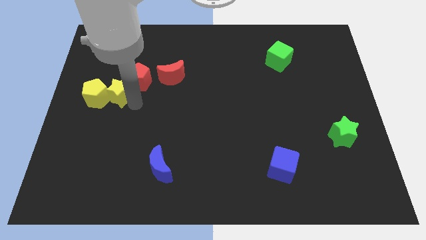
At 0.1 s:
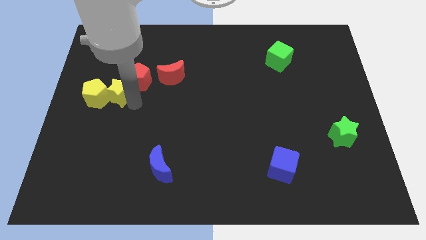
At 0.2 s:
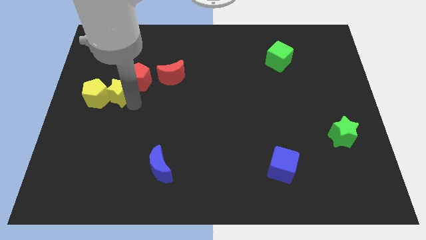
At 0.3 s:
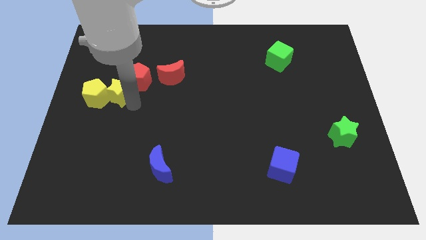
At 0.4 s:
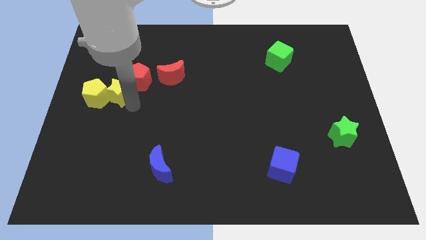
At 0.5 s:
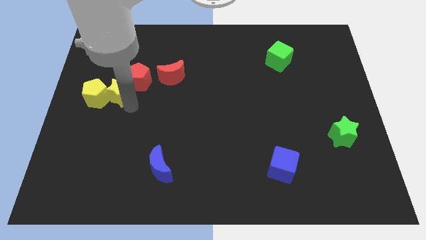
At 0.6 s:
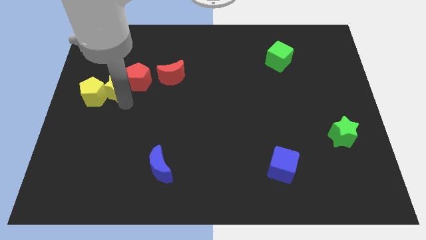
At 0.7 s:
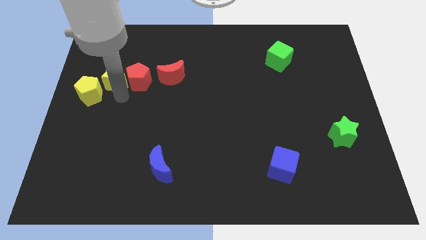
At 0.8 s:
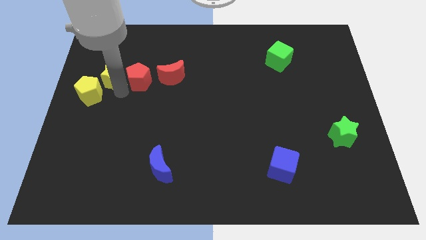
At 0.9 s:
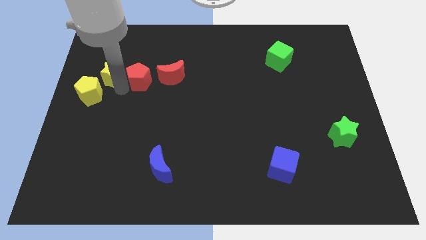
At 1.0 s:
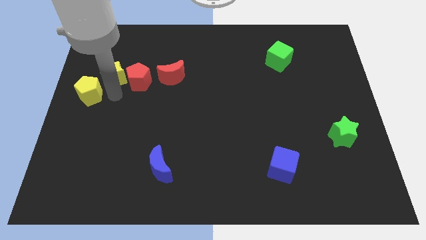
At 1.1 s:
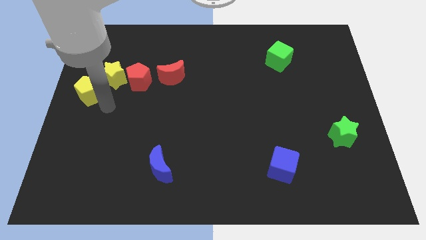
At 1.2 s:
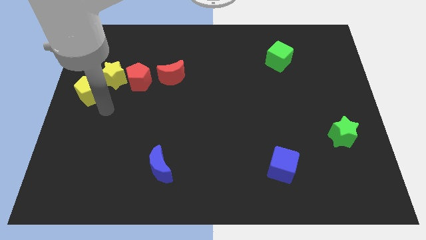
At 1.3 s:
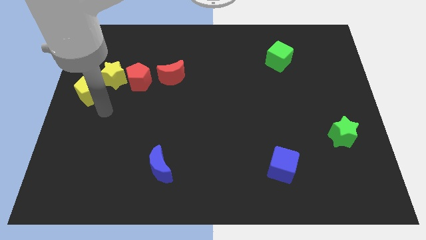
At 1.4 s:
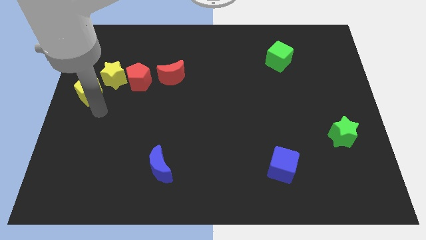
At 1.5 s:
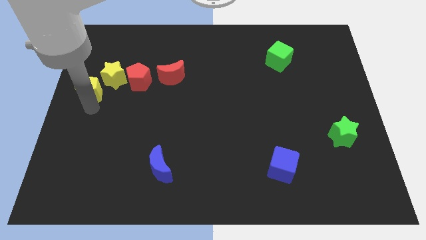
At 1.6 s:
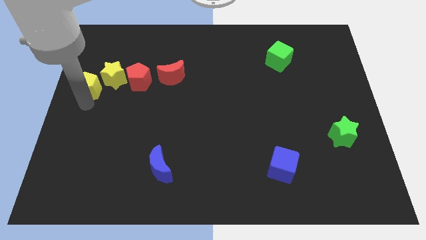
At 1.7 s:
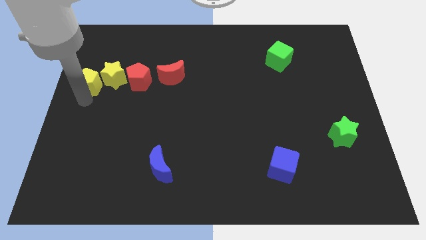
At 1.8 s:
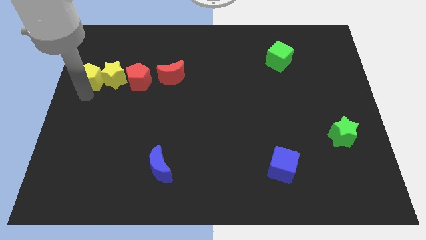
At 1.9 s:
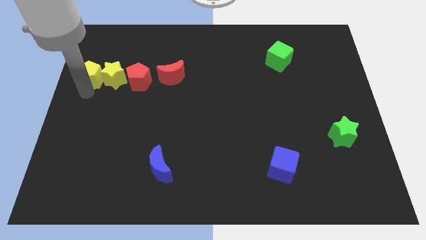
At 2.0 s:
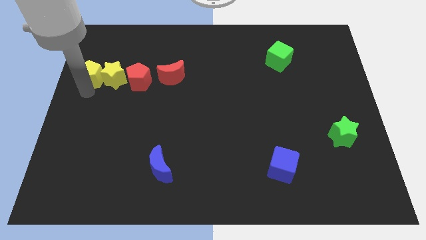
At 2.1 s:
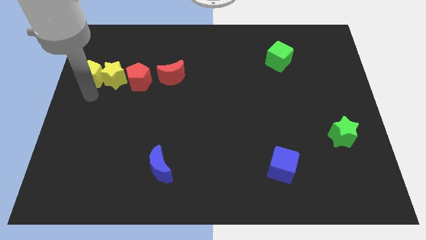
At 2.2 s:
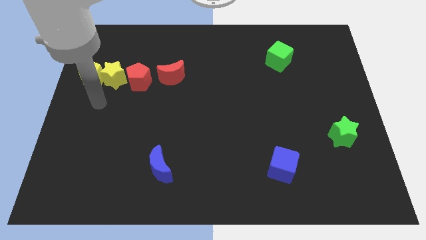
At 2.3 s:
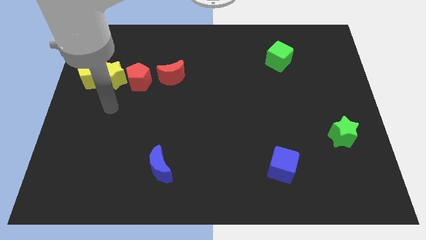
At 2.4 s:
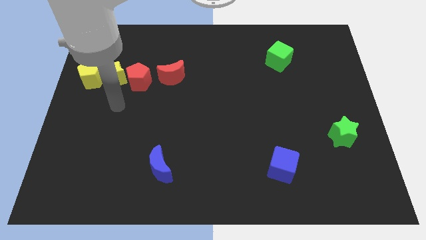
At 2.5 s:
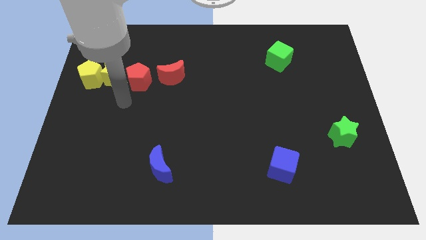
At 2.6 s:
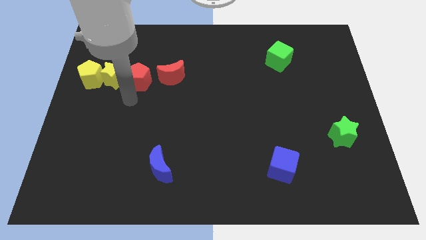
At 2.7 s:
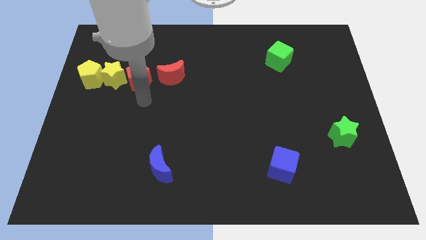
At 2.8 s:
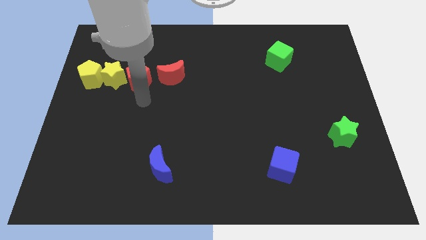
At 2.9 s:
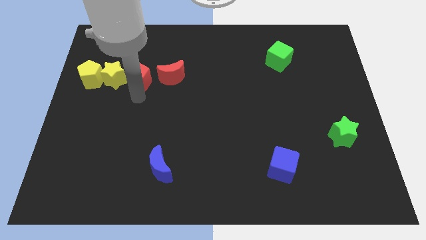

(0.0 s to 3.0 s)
place the yellow star and yellow pentagon in a horizontal line at the left side of the red pentagon

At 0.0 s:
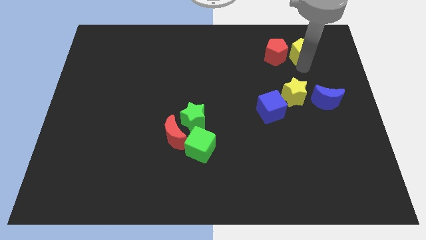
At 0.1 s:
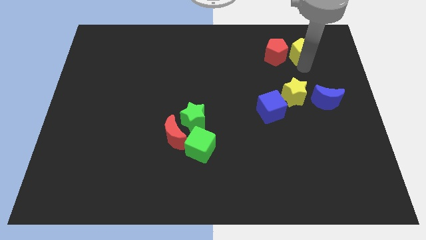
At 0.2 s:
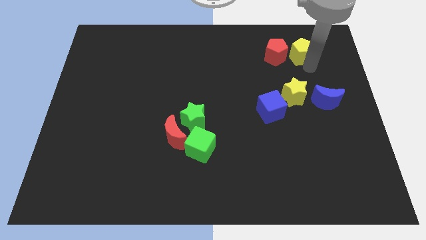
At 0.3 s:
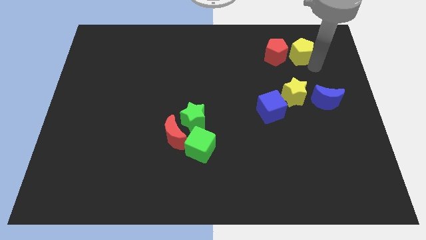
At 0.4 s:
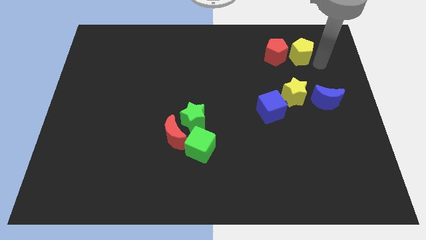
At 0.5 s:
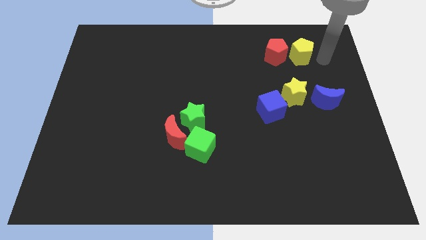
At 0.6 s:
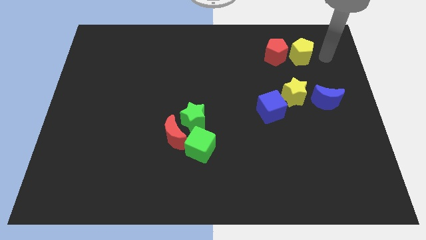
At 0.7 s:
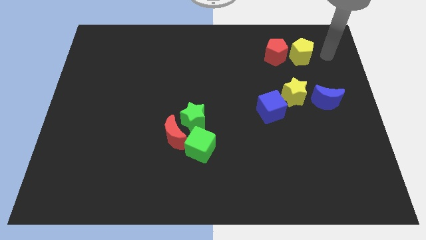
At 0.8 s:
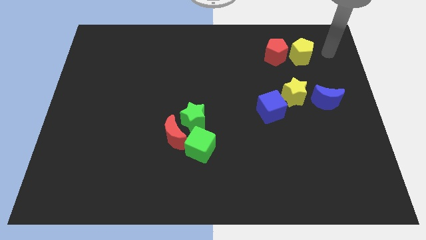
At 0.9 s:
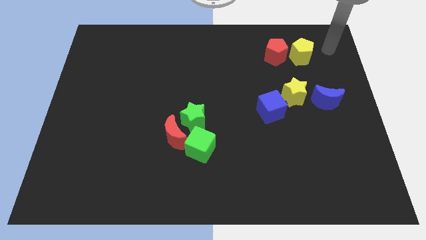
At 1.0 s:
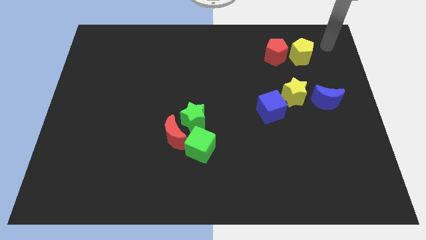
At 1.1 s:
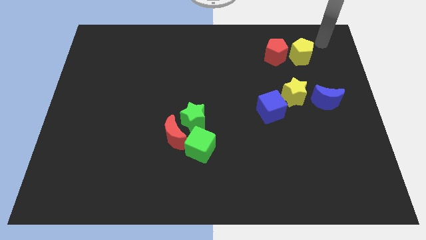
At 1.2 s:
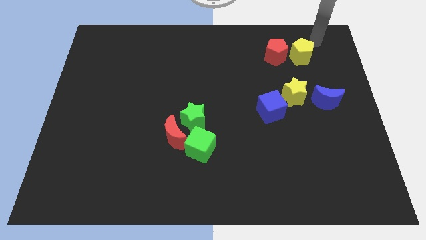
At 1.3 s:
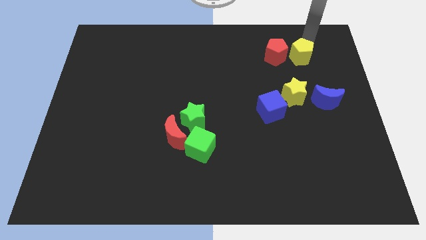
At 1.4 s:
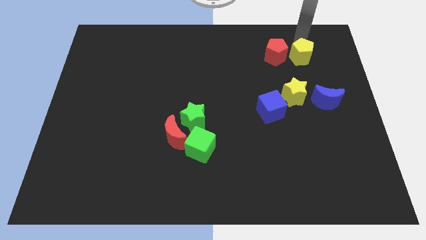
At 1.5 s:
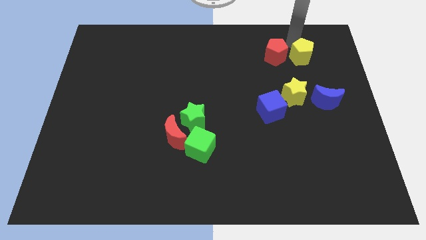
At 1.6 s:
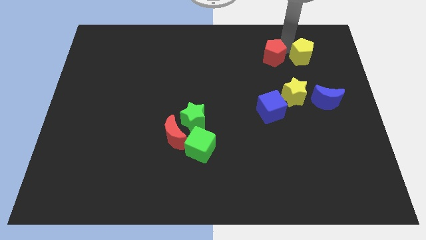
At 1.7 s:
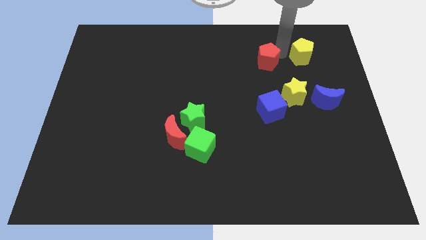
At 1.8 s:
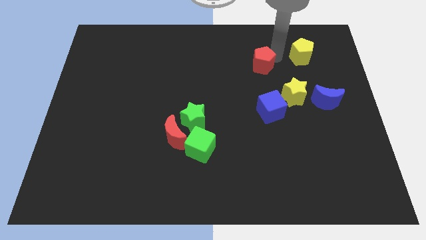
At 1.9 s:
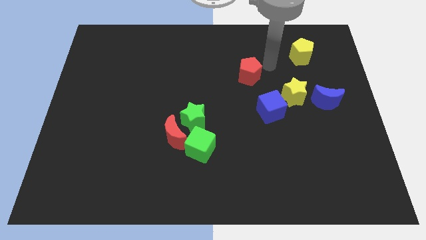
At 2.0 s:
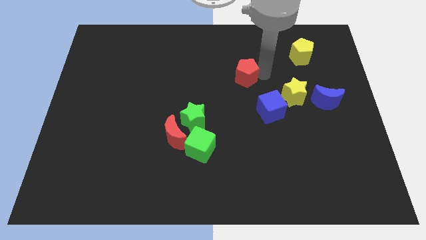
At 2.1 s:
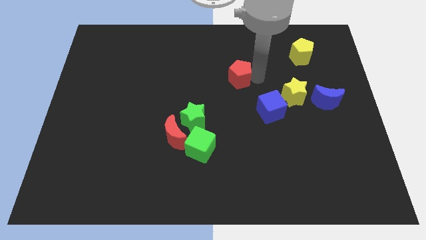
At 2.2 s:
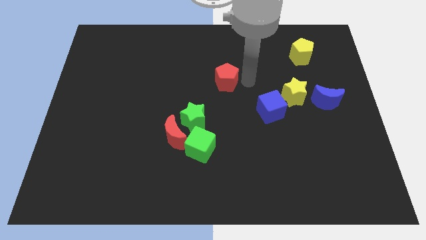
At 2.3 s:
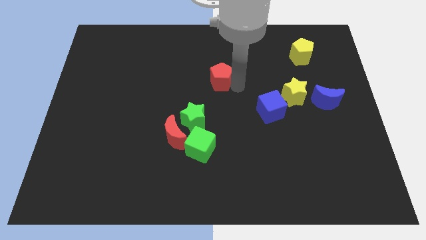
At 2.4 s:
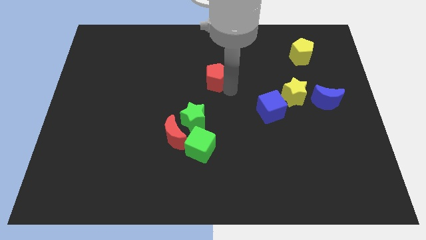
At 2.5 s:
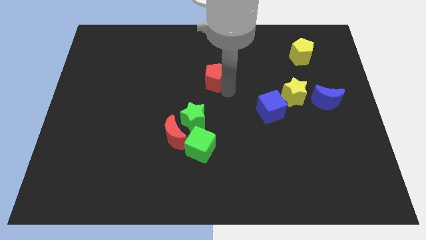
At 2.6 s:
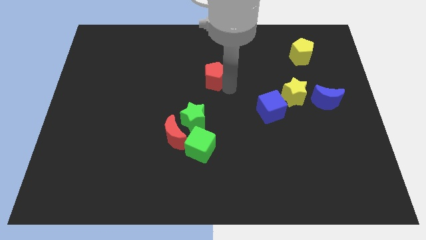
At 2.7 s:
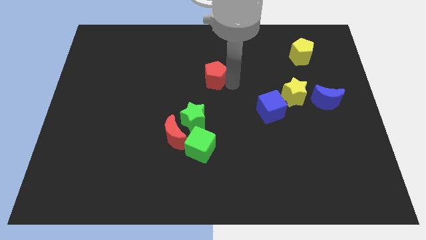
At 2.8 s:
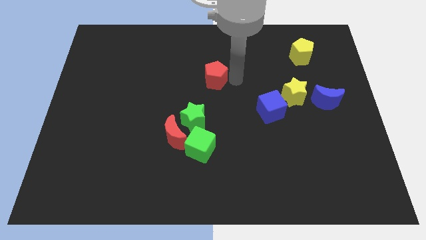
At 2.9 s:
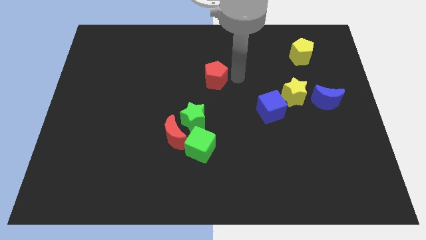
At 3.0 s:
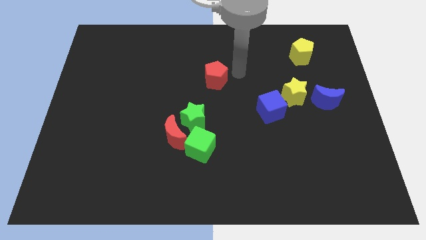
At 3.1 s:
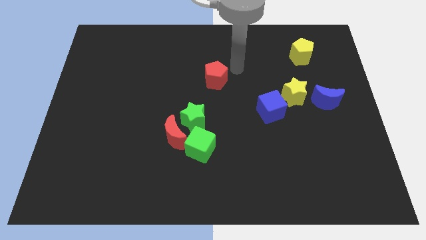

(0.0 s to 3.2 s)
separate the red pentagon with yellow pentagon towards the center of the board

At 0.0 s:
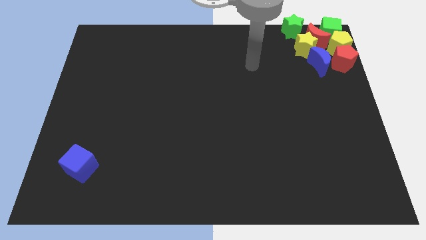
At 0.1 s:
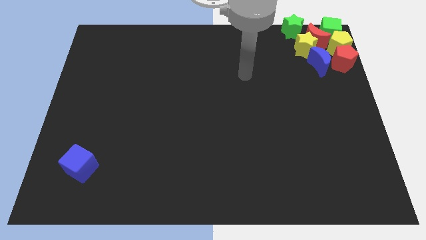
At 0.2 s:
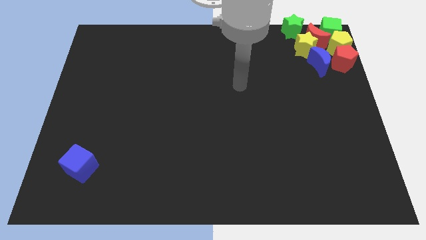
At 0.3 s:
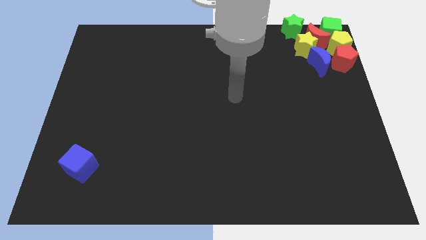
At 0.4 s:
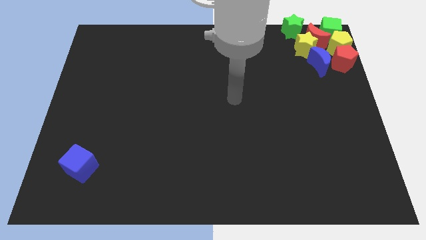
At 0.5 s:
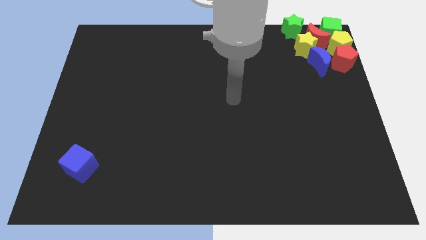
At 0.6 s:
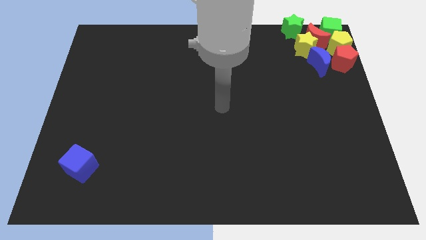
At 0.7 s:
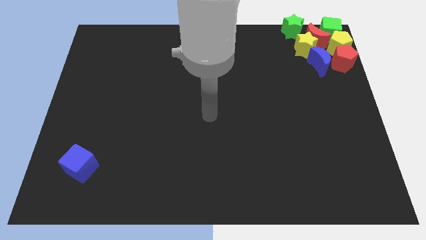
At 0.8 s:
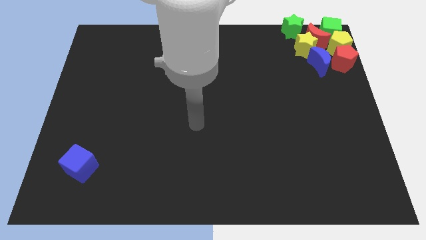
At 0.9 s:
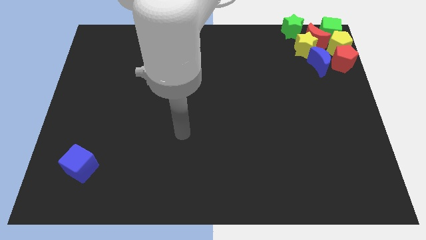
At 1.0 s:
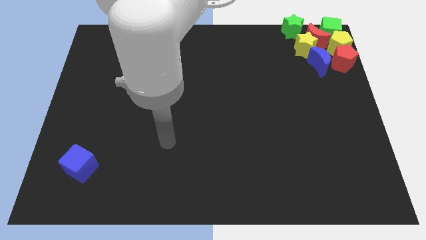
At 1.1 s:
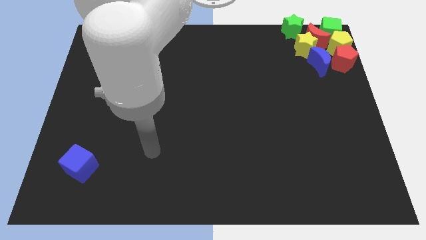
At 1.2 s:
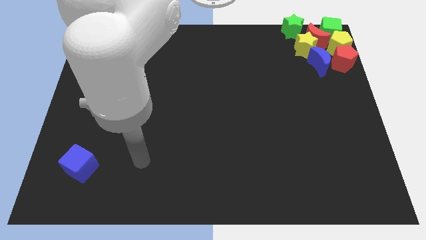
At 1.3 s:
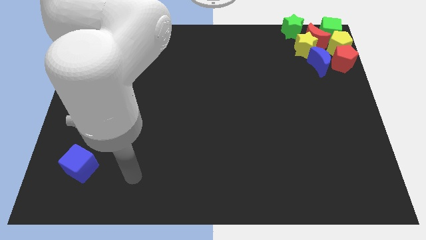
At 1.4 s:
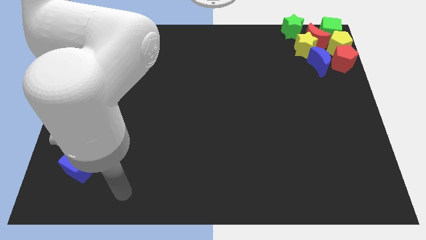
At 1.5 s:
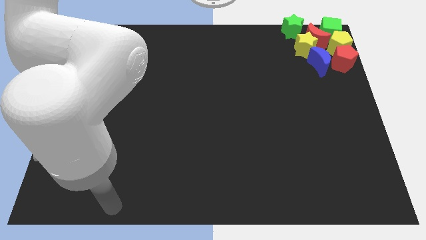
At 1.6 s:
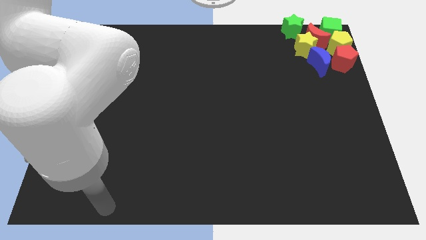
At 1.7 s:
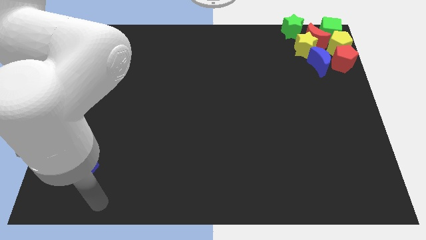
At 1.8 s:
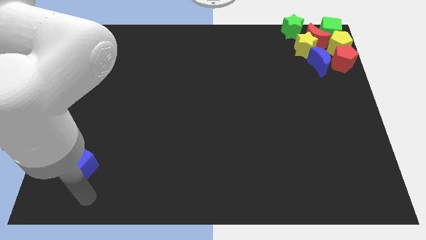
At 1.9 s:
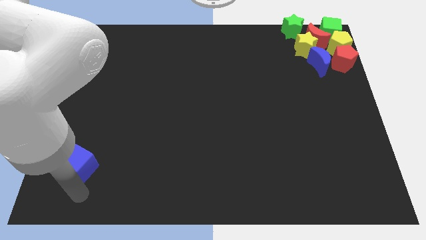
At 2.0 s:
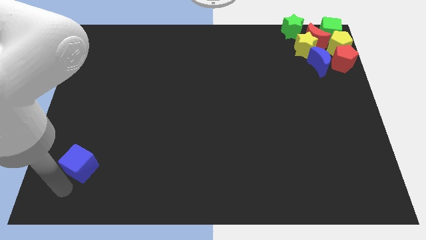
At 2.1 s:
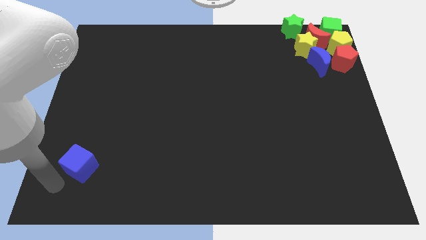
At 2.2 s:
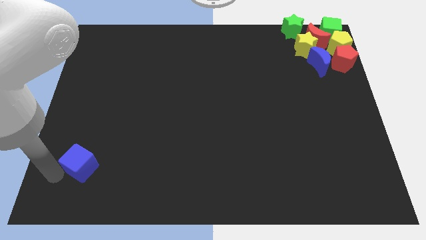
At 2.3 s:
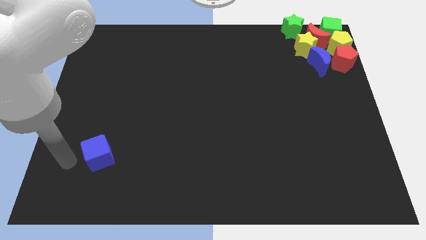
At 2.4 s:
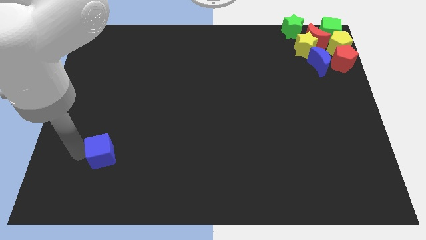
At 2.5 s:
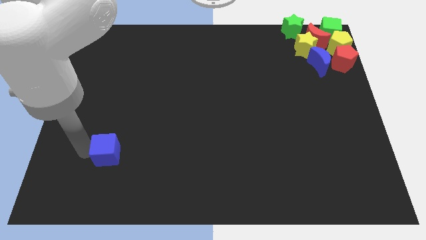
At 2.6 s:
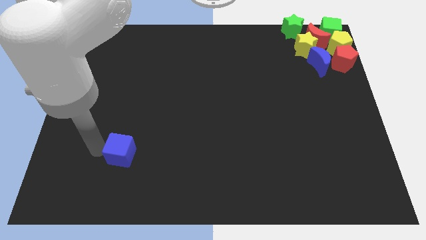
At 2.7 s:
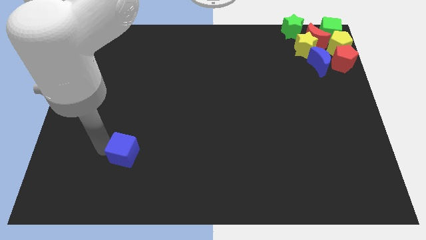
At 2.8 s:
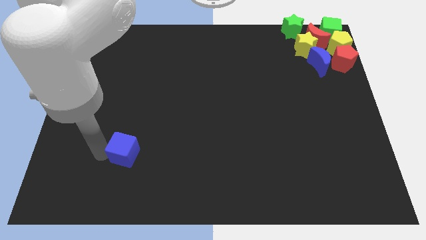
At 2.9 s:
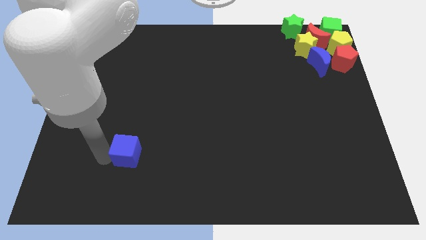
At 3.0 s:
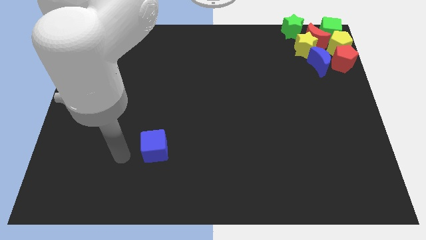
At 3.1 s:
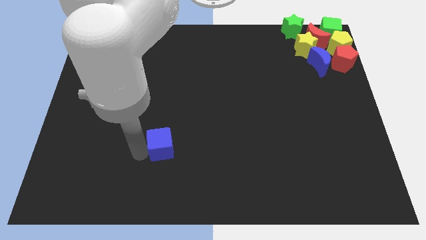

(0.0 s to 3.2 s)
push the blue cube slightly to the right
